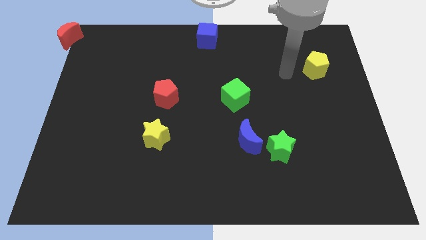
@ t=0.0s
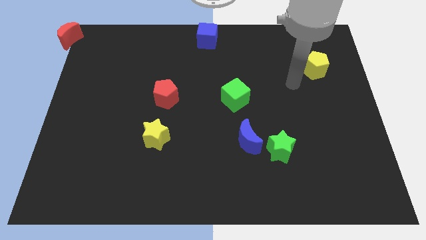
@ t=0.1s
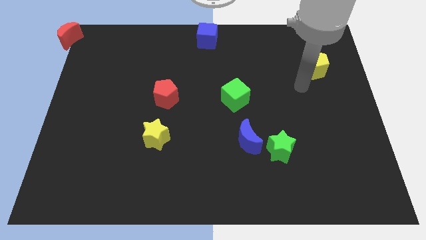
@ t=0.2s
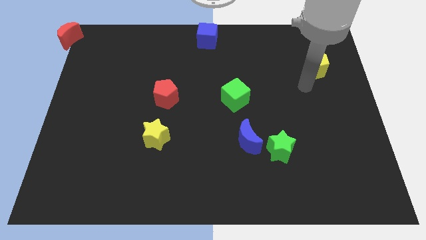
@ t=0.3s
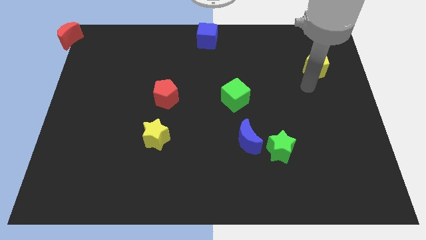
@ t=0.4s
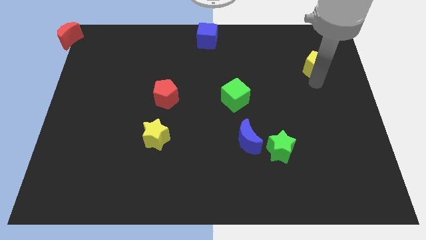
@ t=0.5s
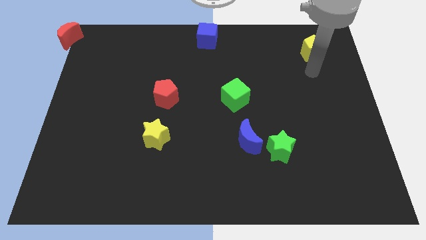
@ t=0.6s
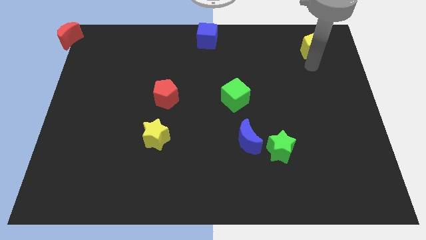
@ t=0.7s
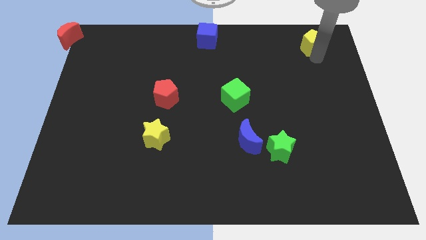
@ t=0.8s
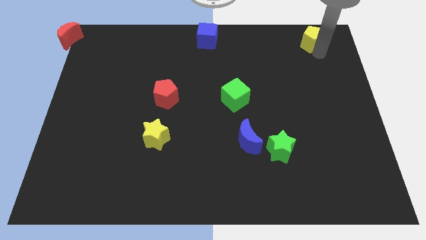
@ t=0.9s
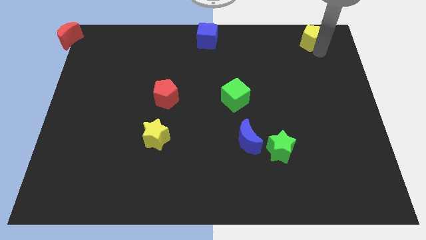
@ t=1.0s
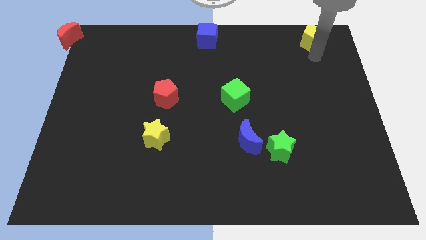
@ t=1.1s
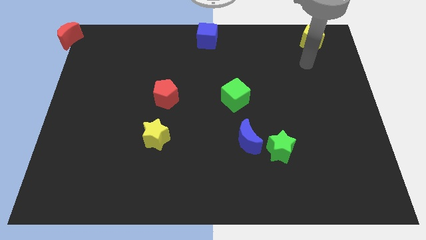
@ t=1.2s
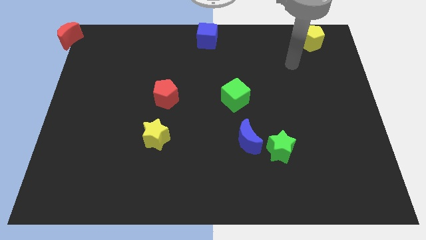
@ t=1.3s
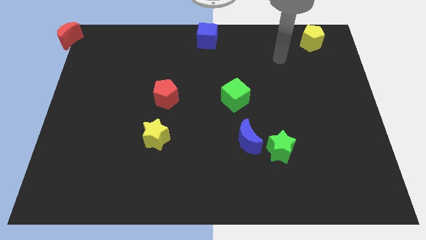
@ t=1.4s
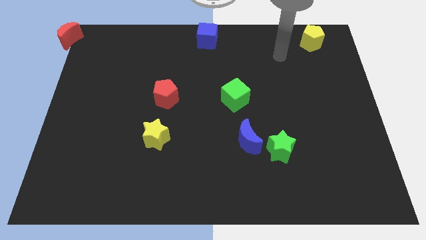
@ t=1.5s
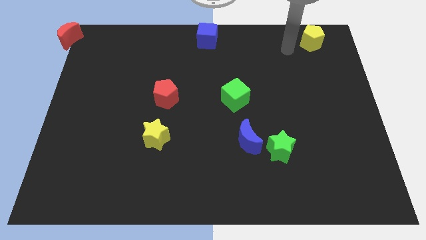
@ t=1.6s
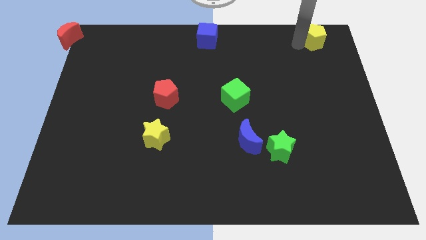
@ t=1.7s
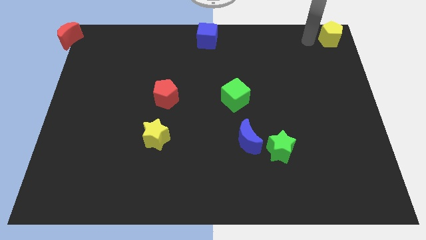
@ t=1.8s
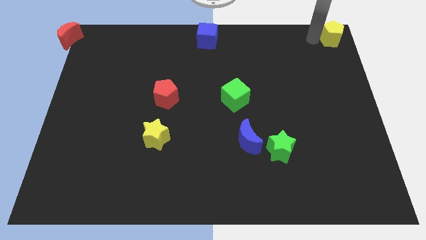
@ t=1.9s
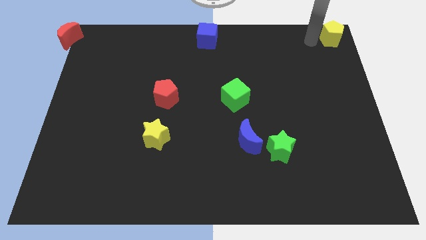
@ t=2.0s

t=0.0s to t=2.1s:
place the yellow pentagon at the top right corner

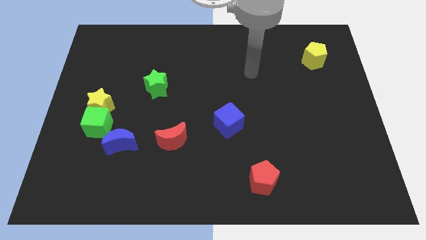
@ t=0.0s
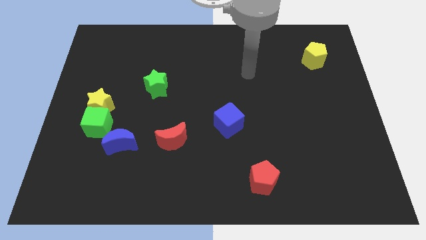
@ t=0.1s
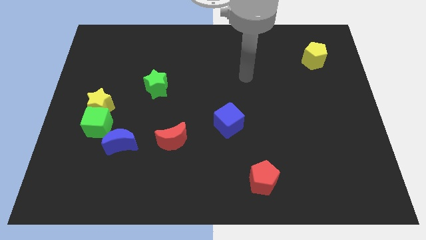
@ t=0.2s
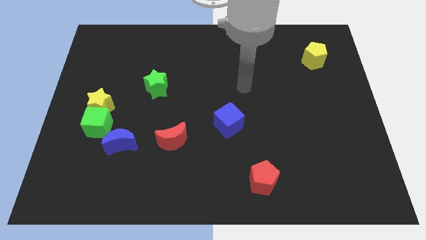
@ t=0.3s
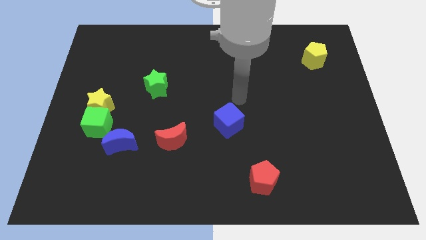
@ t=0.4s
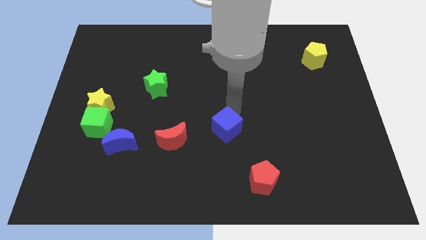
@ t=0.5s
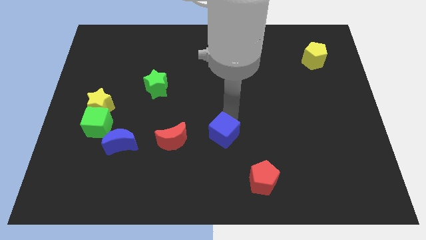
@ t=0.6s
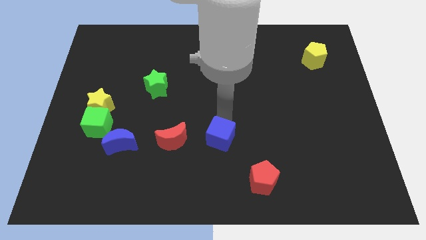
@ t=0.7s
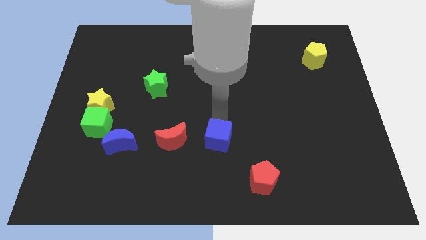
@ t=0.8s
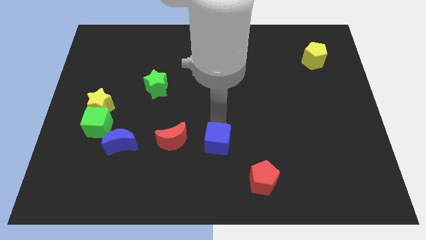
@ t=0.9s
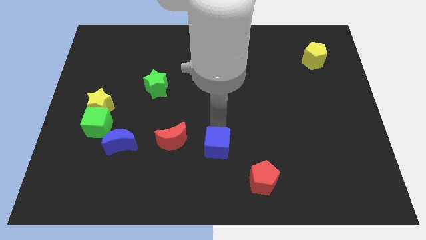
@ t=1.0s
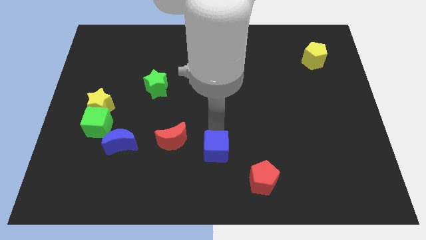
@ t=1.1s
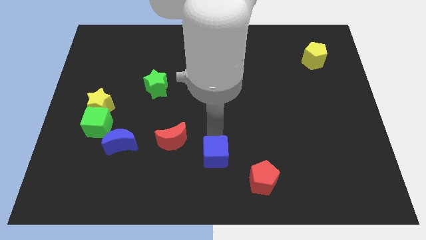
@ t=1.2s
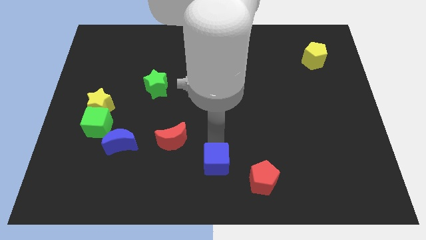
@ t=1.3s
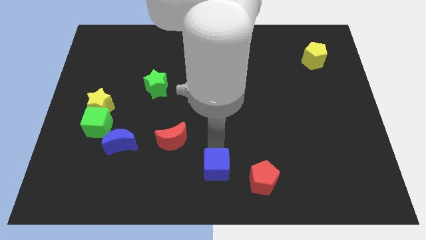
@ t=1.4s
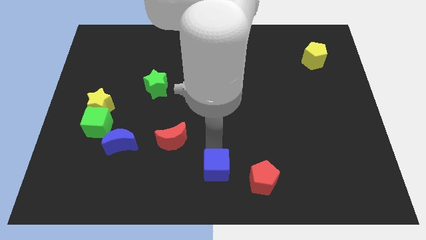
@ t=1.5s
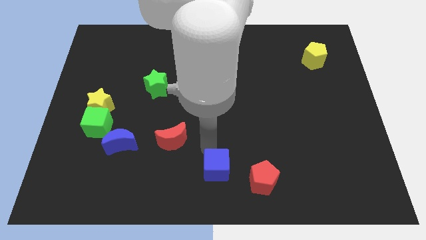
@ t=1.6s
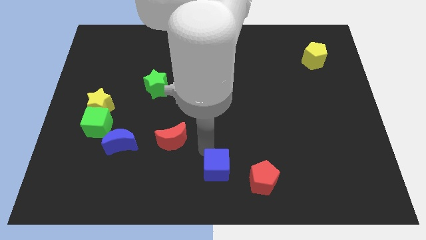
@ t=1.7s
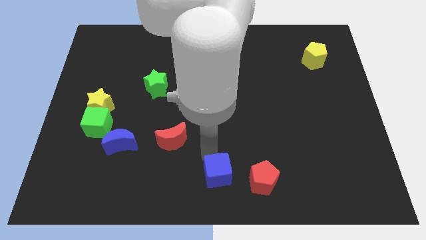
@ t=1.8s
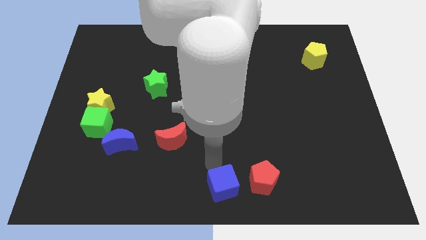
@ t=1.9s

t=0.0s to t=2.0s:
push the blue cube to the left of the red pentagon

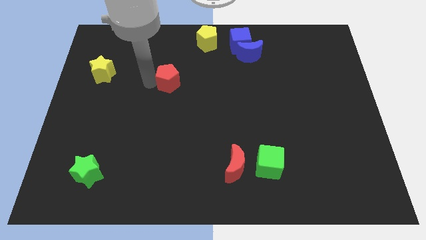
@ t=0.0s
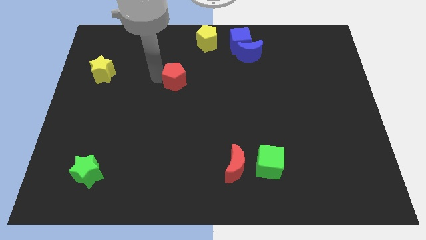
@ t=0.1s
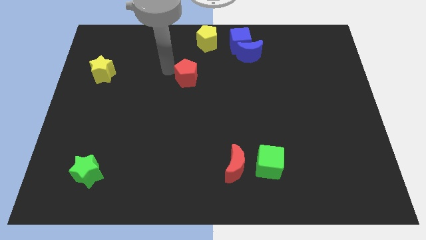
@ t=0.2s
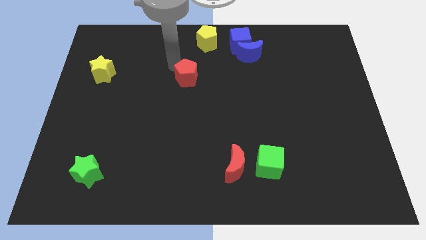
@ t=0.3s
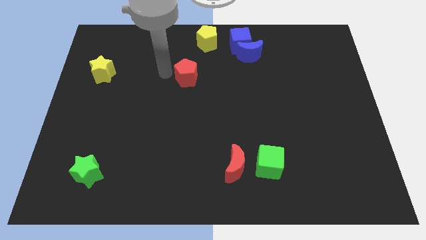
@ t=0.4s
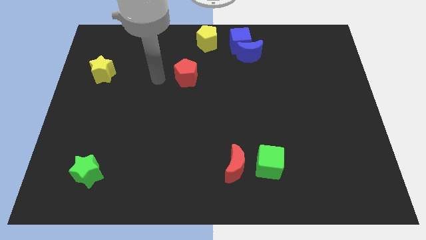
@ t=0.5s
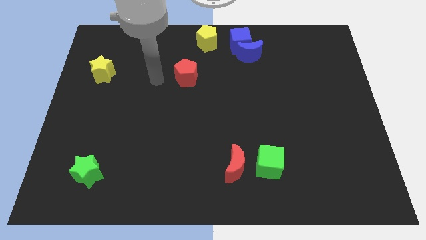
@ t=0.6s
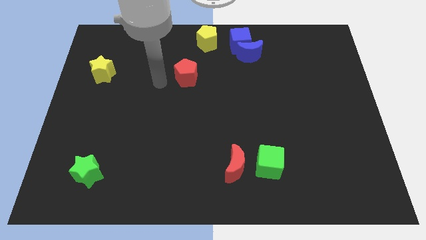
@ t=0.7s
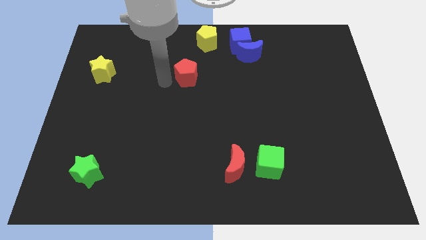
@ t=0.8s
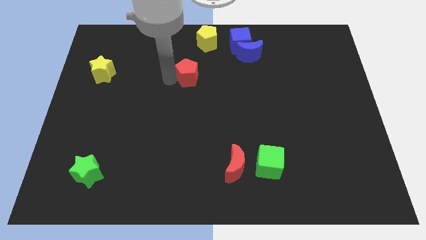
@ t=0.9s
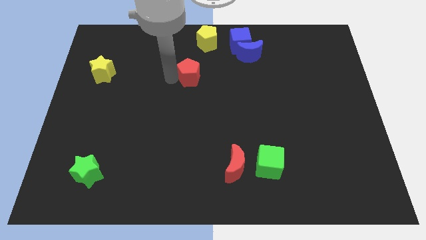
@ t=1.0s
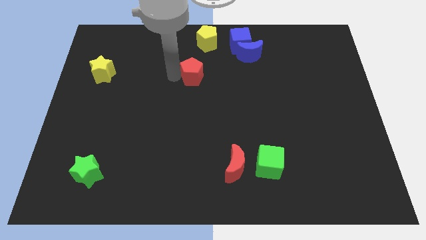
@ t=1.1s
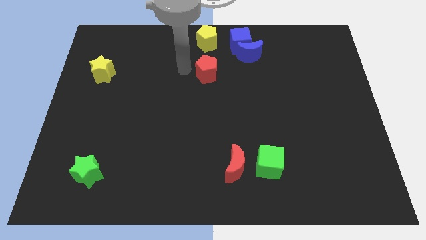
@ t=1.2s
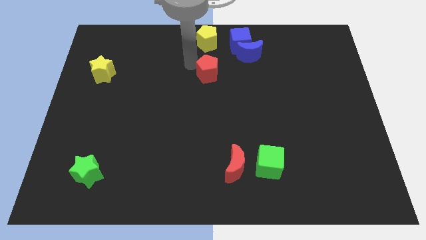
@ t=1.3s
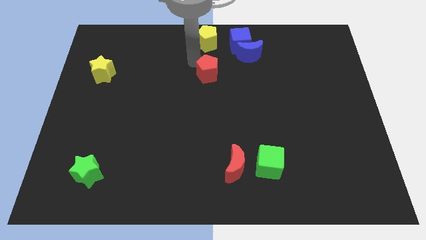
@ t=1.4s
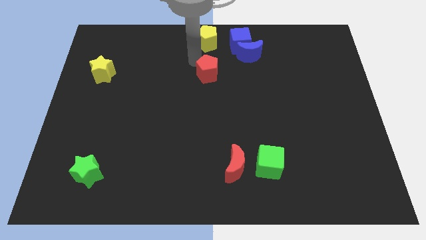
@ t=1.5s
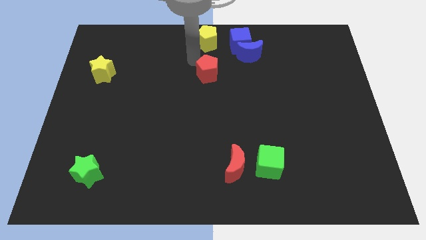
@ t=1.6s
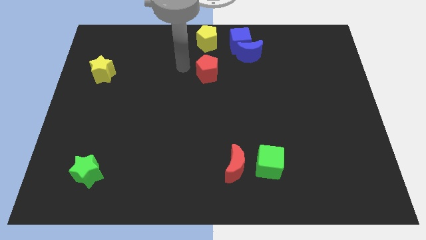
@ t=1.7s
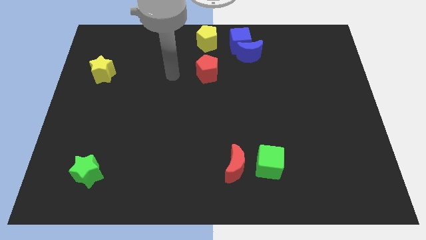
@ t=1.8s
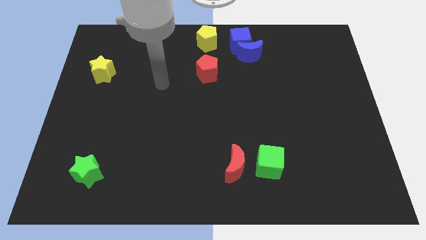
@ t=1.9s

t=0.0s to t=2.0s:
move the red pentagon below the yellow pentagon

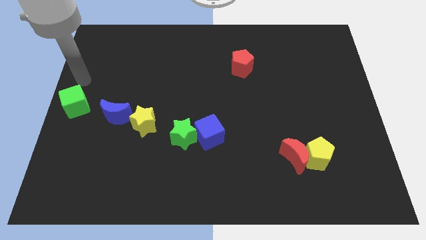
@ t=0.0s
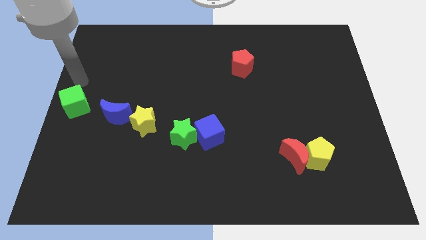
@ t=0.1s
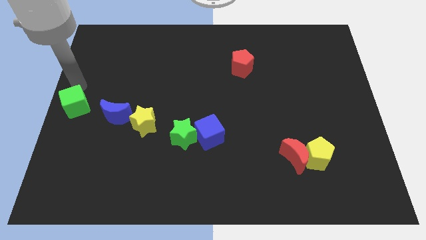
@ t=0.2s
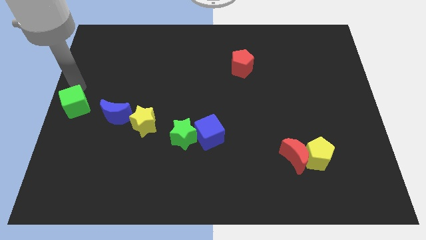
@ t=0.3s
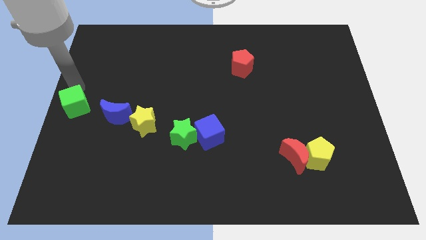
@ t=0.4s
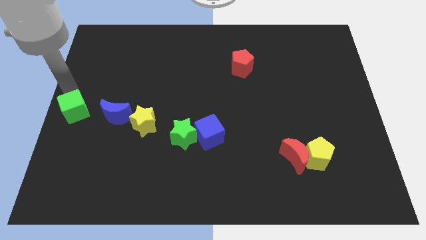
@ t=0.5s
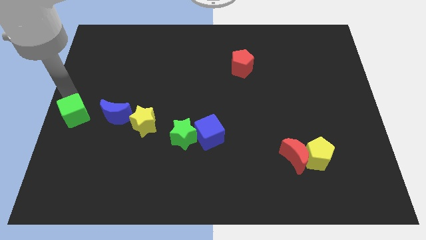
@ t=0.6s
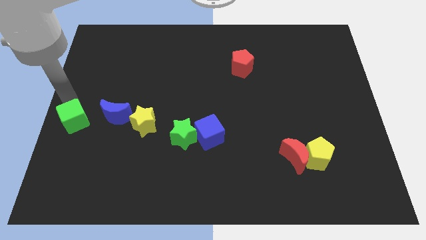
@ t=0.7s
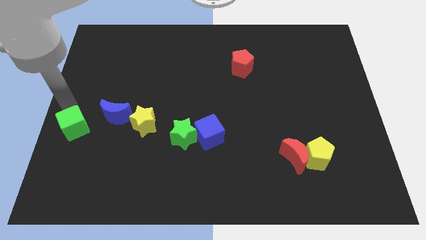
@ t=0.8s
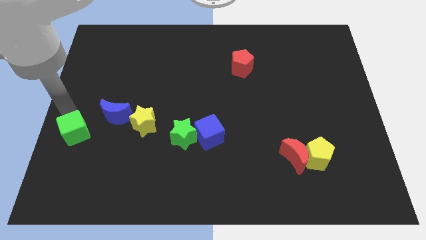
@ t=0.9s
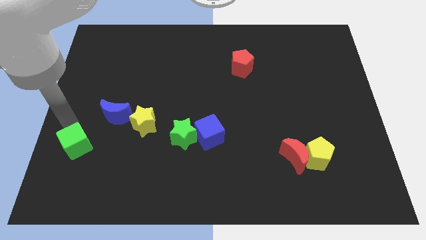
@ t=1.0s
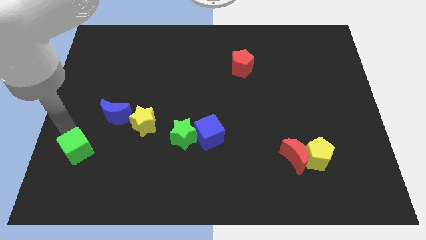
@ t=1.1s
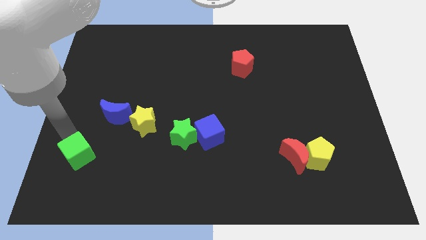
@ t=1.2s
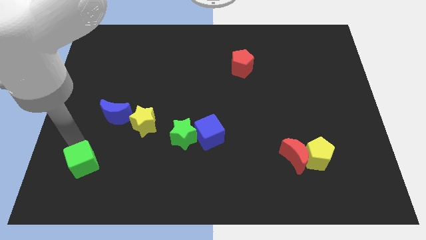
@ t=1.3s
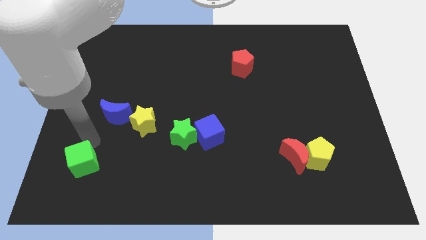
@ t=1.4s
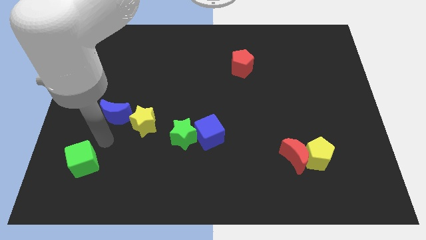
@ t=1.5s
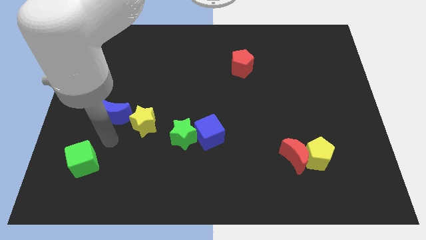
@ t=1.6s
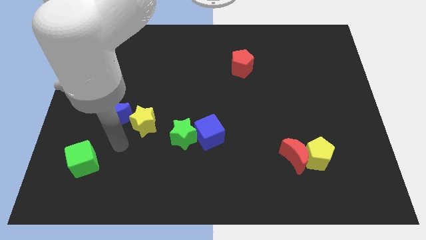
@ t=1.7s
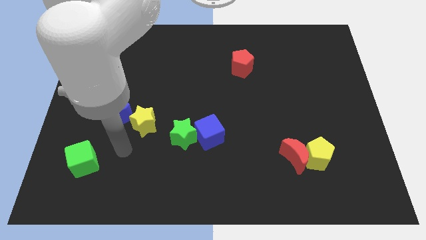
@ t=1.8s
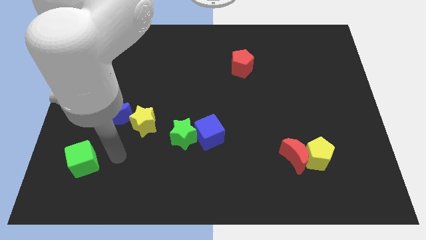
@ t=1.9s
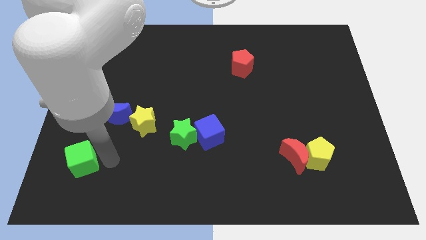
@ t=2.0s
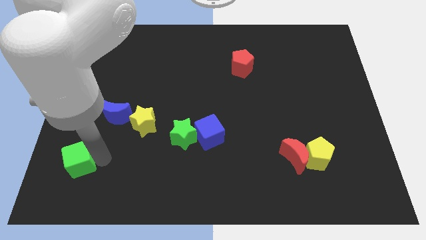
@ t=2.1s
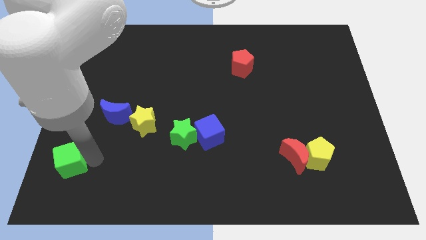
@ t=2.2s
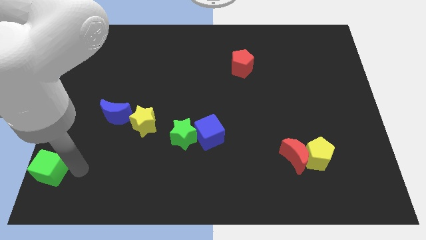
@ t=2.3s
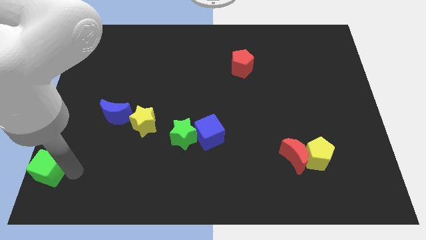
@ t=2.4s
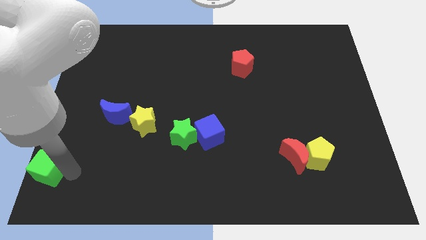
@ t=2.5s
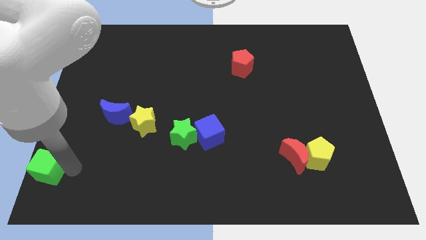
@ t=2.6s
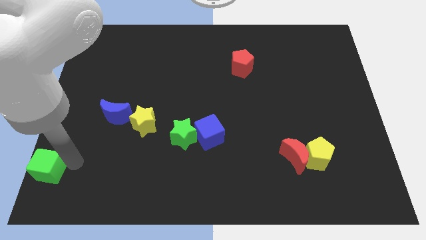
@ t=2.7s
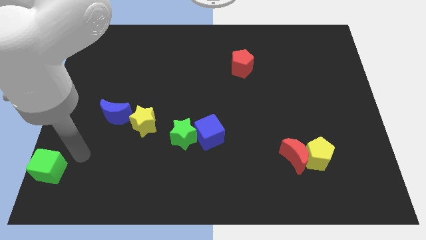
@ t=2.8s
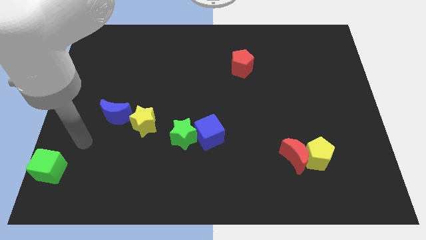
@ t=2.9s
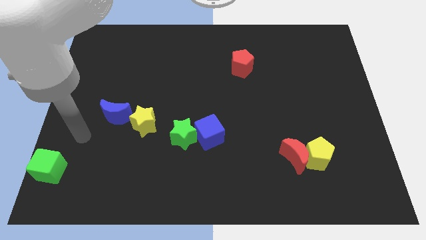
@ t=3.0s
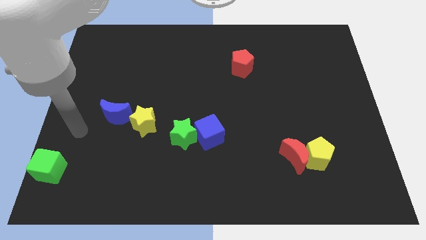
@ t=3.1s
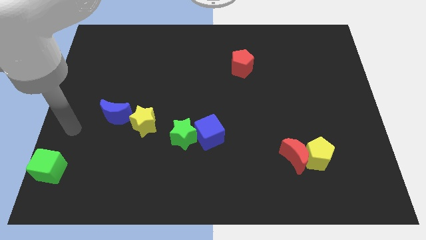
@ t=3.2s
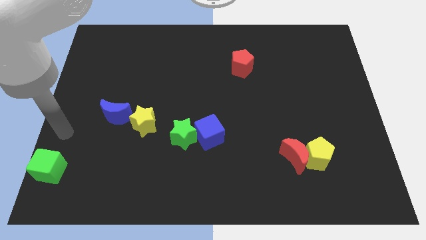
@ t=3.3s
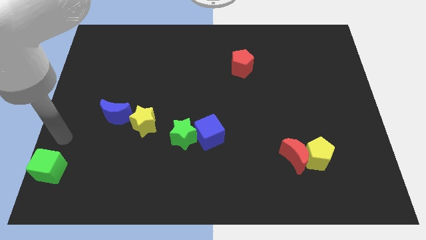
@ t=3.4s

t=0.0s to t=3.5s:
move the green cube diagonally bottom left to the blue moon
